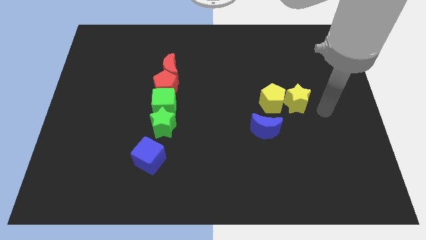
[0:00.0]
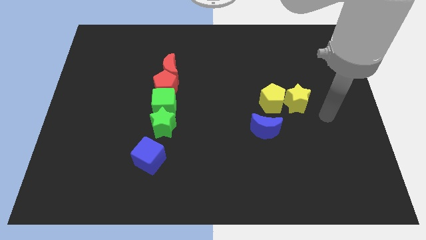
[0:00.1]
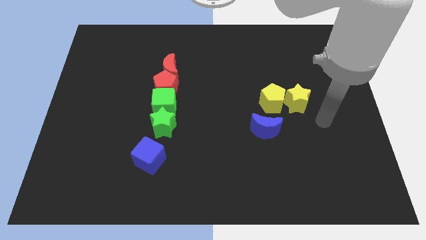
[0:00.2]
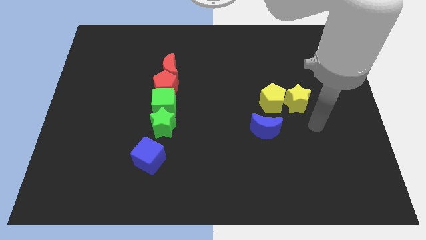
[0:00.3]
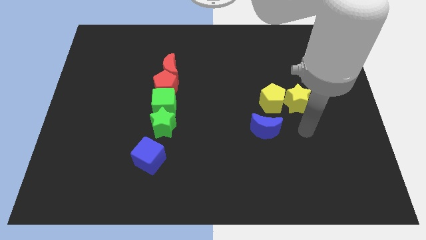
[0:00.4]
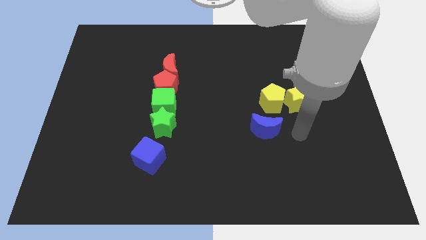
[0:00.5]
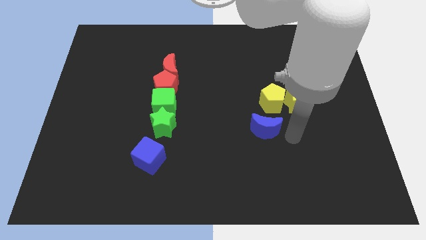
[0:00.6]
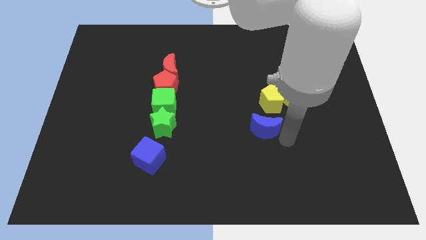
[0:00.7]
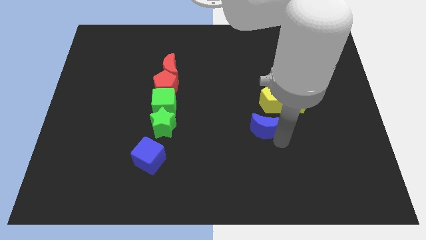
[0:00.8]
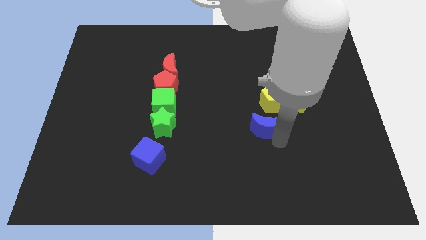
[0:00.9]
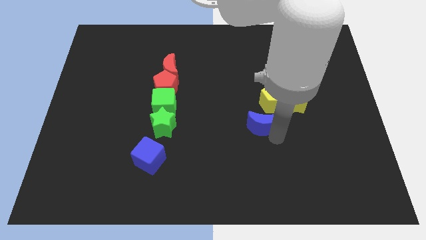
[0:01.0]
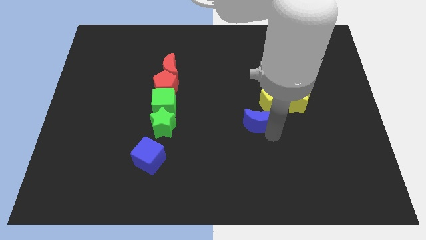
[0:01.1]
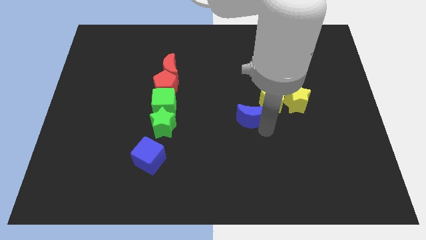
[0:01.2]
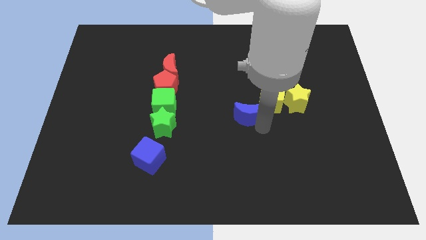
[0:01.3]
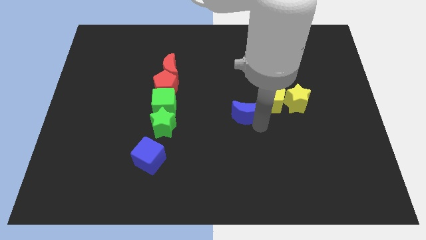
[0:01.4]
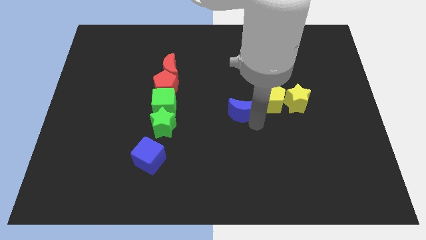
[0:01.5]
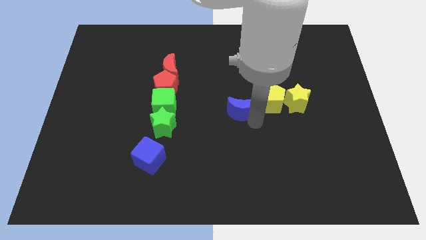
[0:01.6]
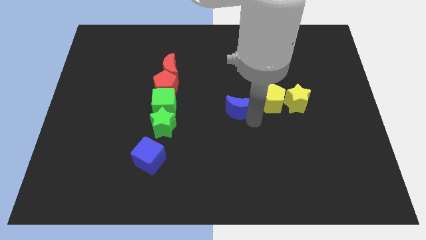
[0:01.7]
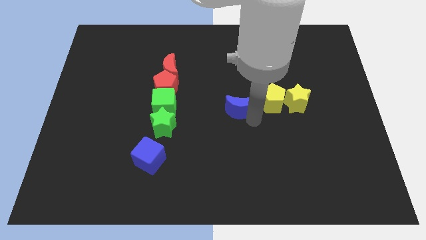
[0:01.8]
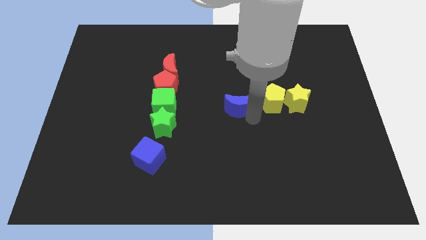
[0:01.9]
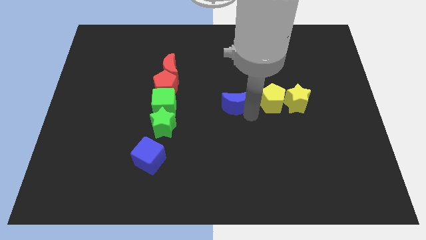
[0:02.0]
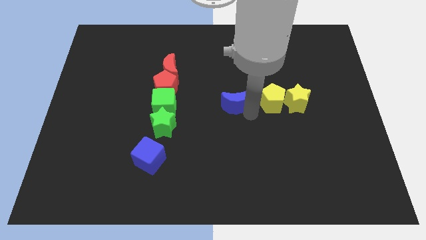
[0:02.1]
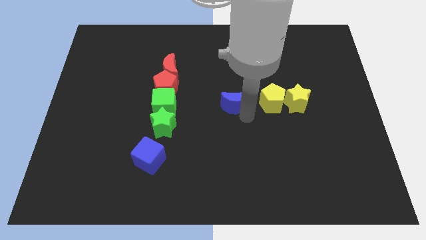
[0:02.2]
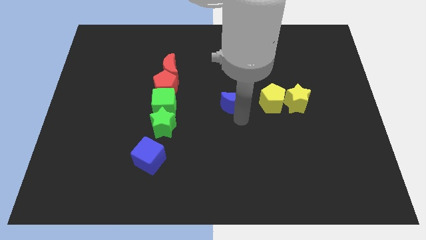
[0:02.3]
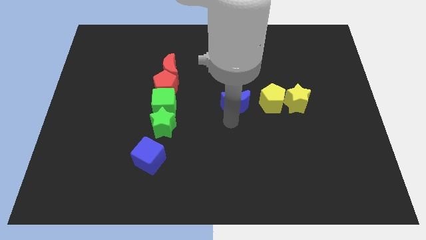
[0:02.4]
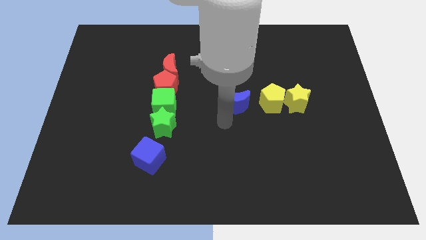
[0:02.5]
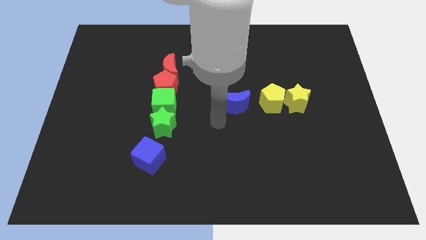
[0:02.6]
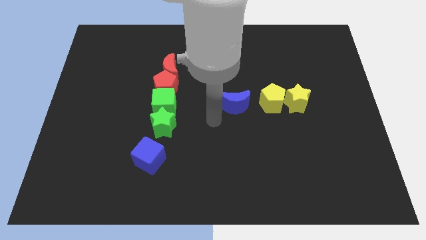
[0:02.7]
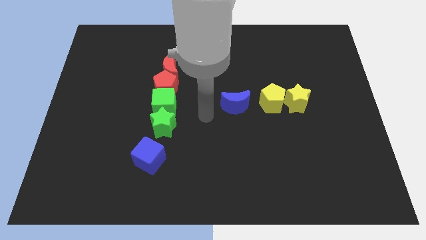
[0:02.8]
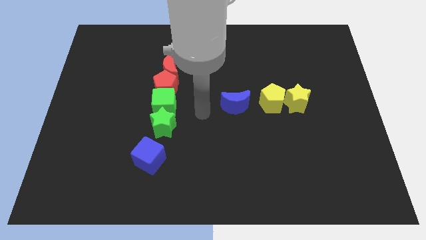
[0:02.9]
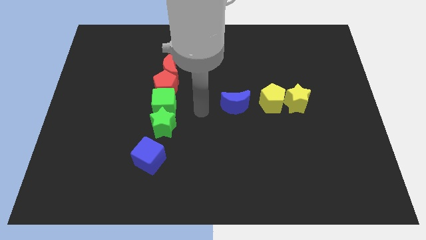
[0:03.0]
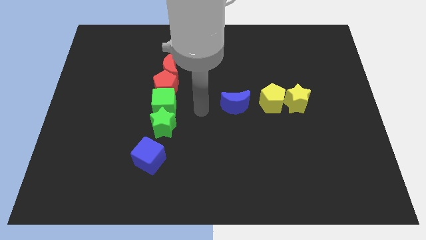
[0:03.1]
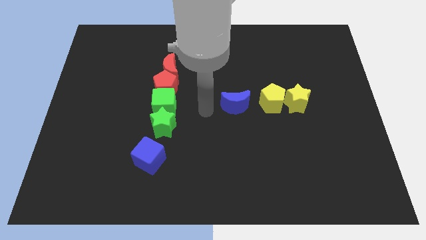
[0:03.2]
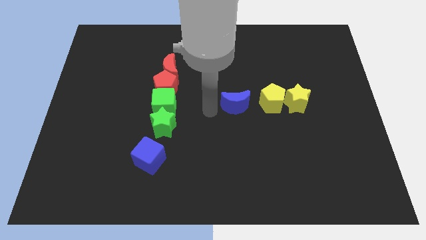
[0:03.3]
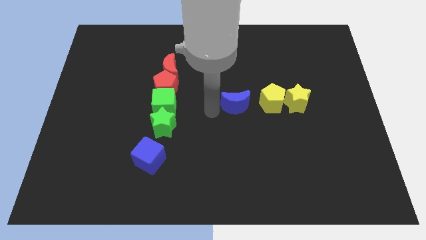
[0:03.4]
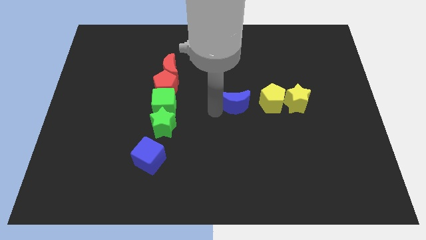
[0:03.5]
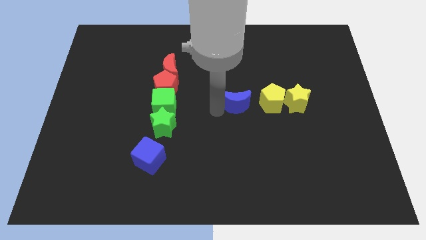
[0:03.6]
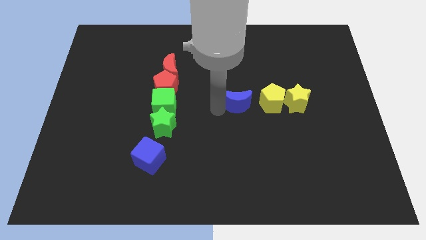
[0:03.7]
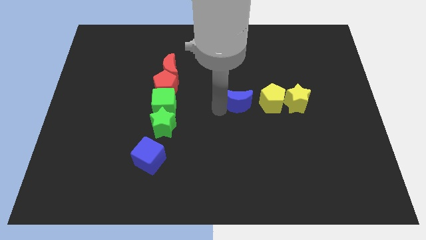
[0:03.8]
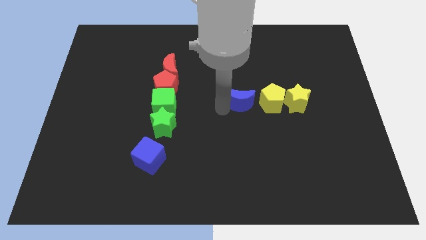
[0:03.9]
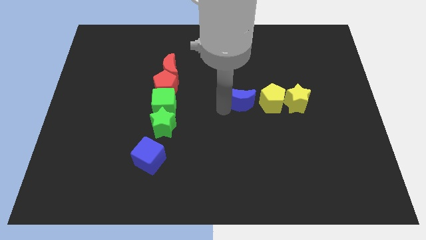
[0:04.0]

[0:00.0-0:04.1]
push the blue crescent to the left of the yellow pentagon

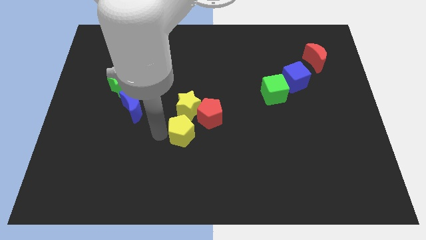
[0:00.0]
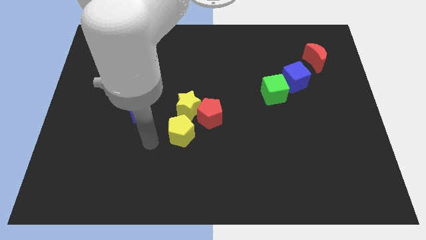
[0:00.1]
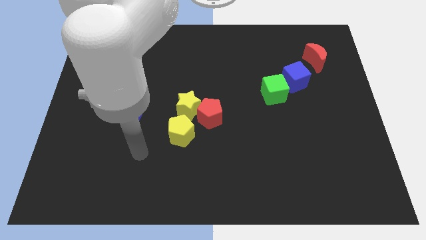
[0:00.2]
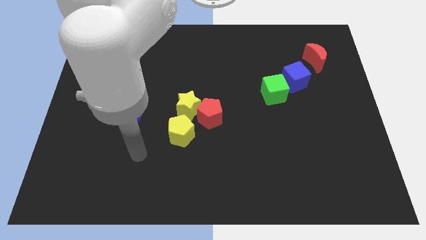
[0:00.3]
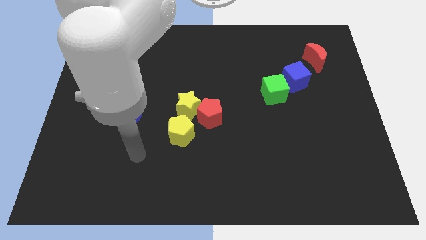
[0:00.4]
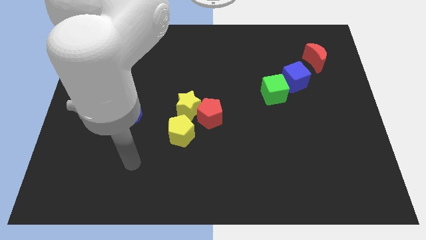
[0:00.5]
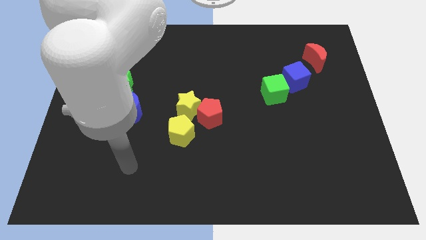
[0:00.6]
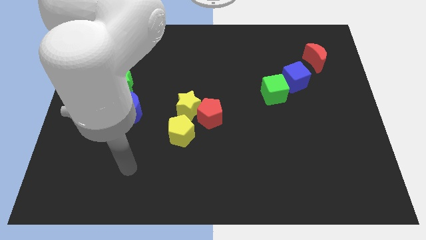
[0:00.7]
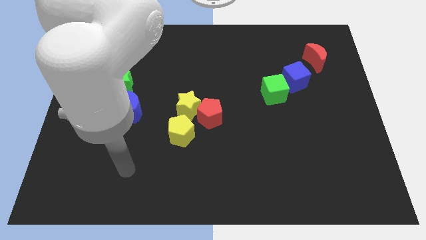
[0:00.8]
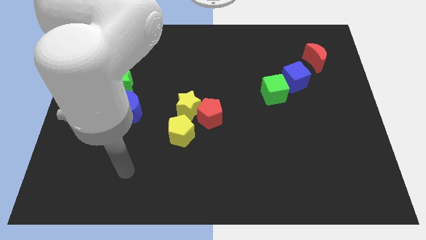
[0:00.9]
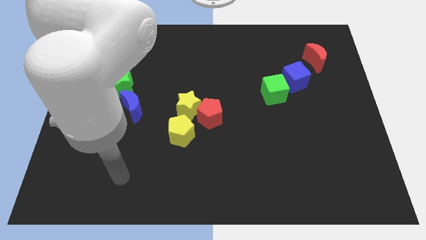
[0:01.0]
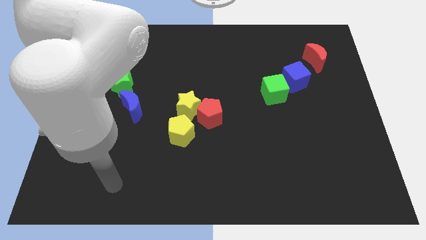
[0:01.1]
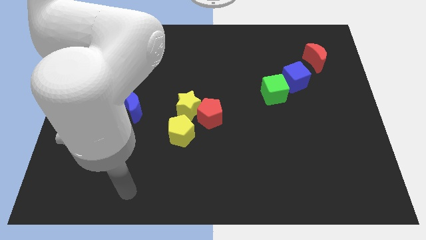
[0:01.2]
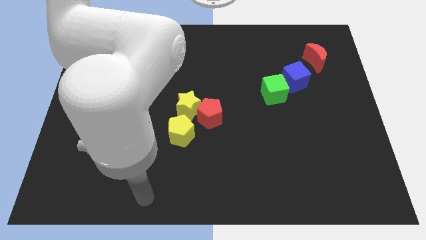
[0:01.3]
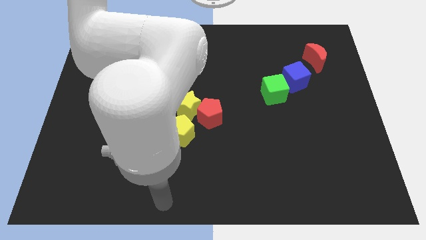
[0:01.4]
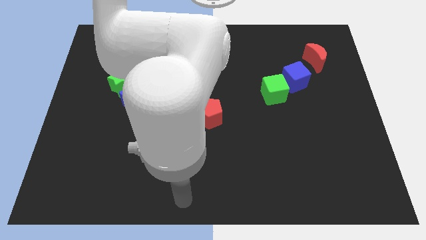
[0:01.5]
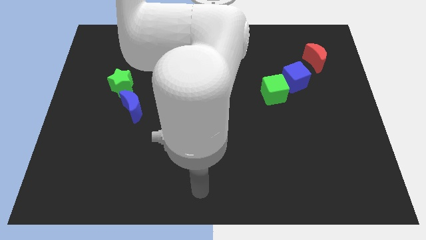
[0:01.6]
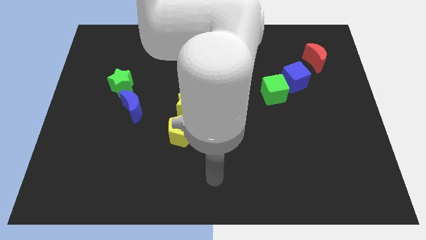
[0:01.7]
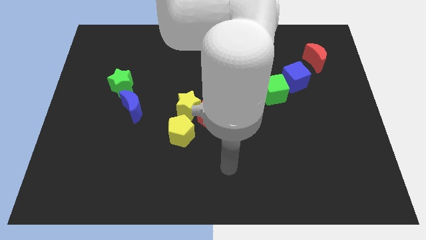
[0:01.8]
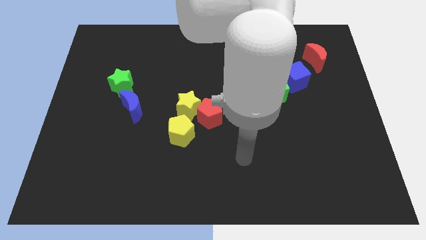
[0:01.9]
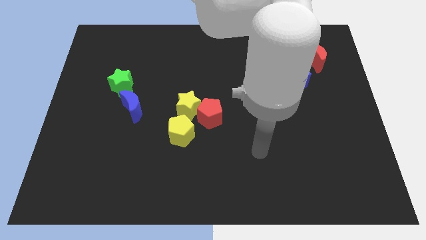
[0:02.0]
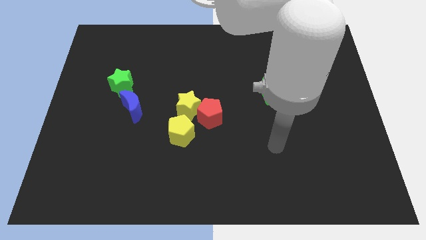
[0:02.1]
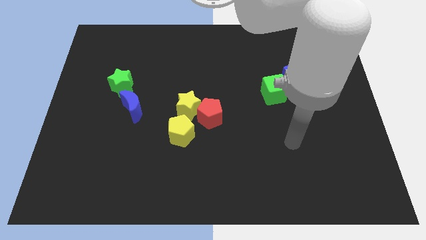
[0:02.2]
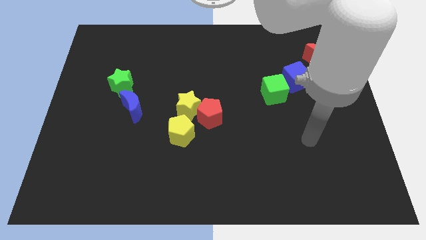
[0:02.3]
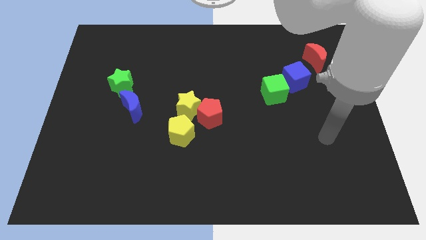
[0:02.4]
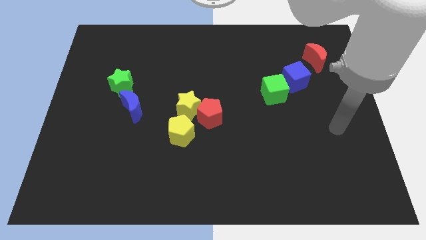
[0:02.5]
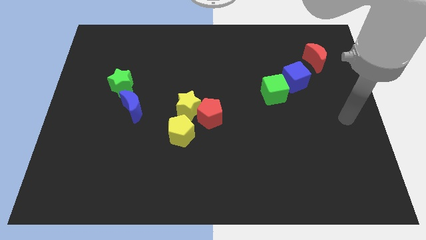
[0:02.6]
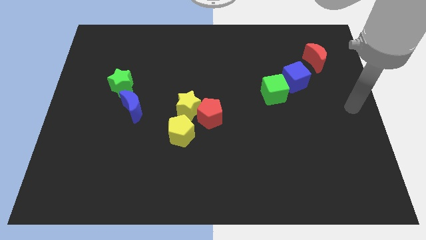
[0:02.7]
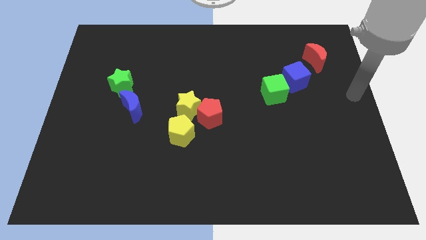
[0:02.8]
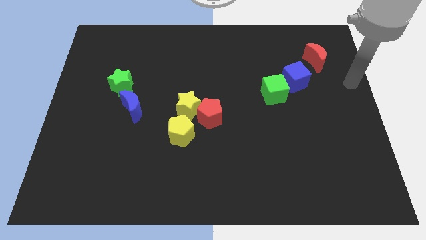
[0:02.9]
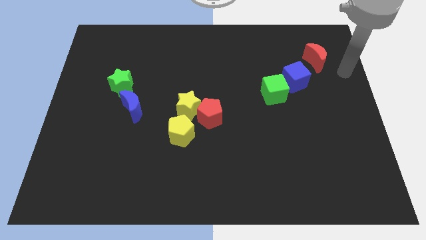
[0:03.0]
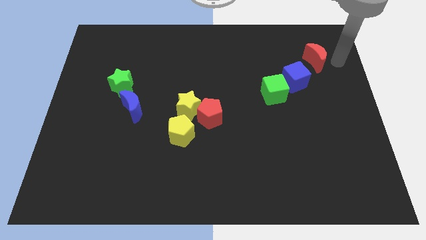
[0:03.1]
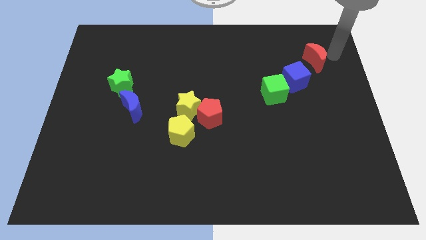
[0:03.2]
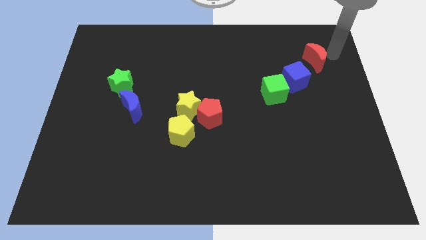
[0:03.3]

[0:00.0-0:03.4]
move your arm towards the red crescent

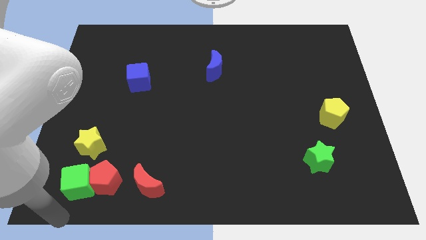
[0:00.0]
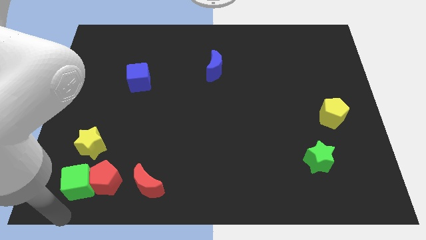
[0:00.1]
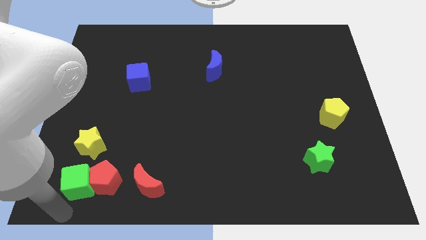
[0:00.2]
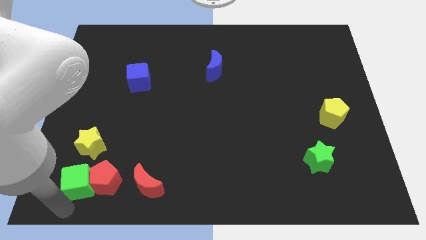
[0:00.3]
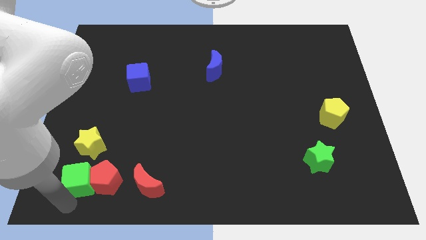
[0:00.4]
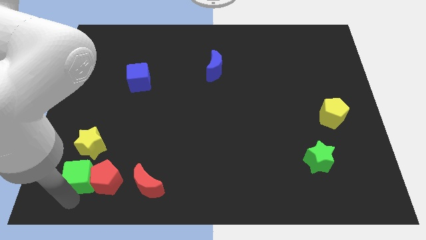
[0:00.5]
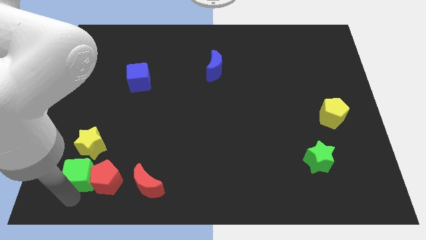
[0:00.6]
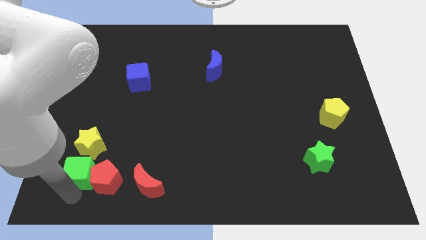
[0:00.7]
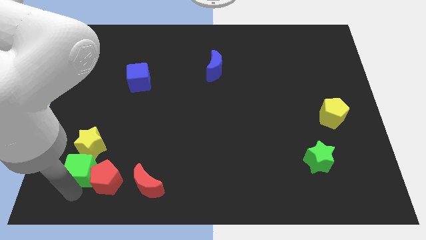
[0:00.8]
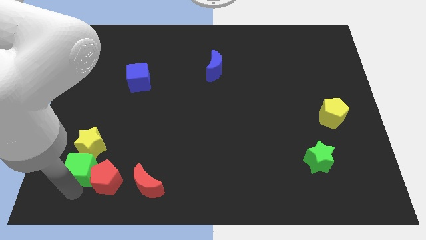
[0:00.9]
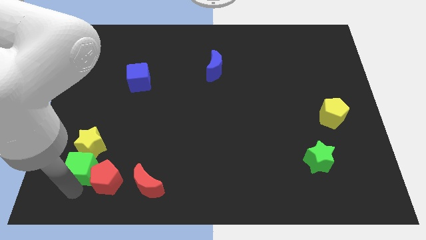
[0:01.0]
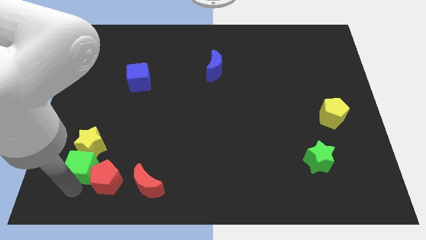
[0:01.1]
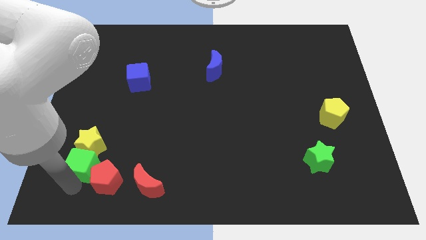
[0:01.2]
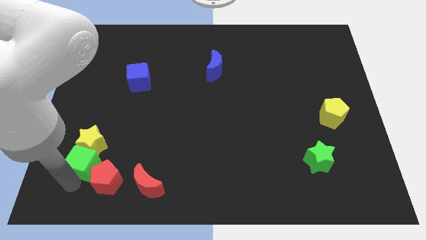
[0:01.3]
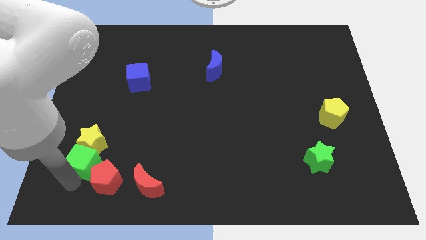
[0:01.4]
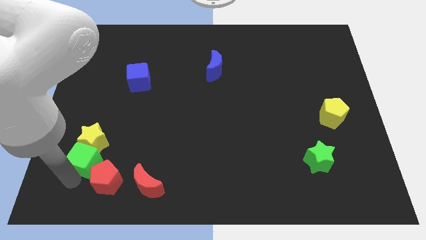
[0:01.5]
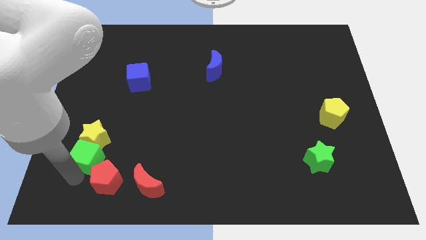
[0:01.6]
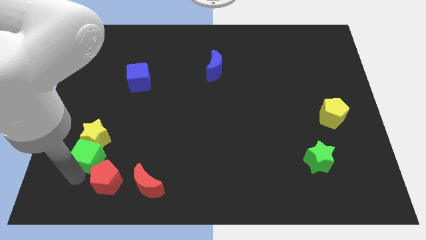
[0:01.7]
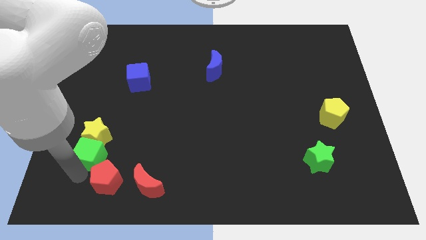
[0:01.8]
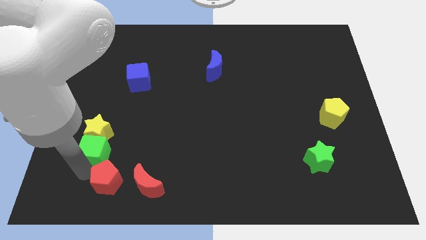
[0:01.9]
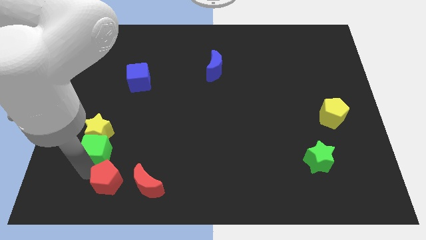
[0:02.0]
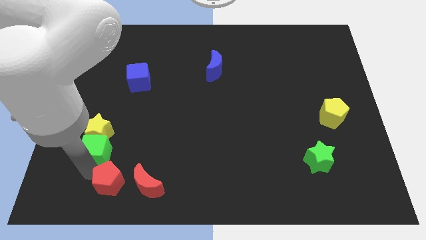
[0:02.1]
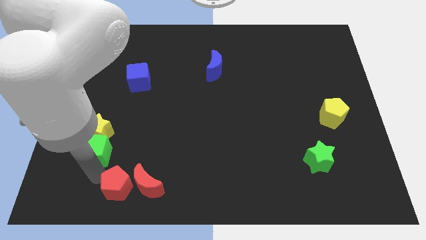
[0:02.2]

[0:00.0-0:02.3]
push the green cube into the yellow star
